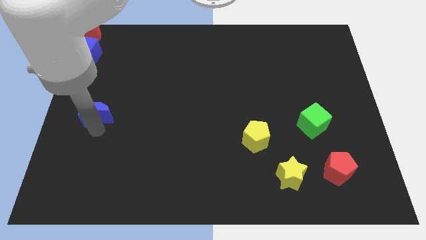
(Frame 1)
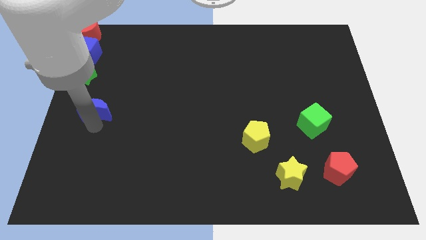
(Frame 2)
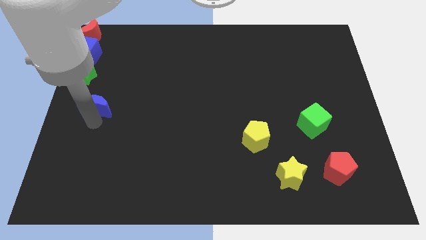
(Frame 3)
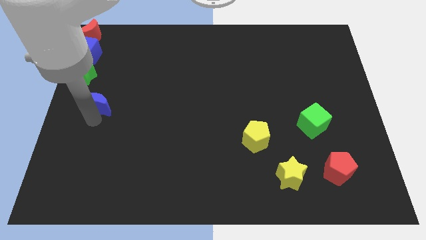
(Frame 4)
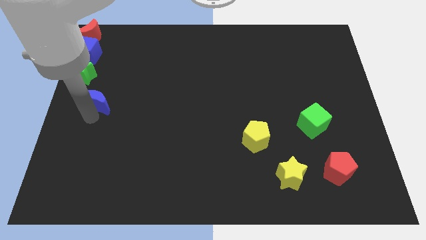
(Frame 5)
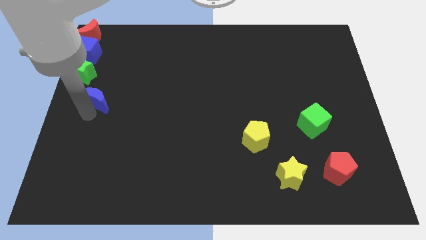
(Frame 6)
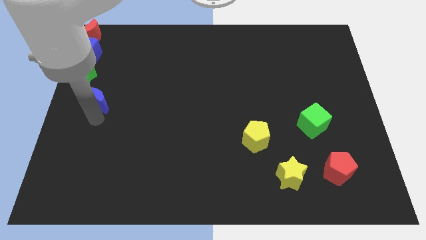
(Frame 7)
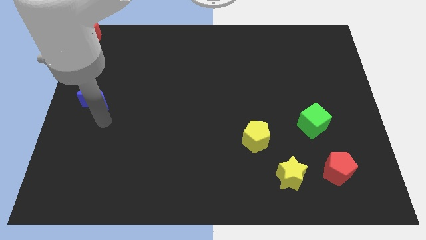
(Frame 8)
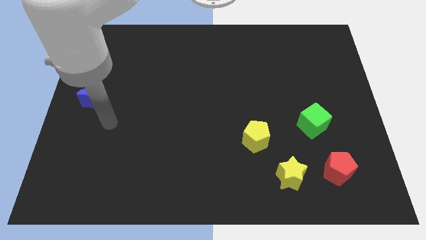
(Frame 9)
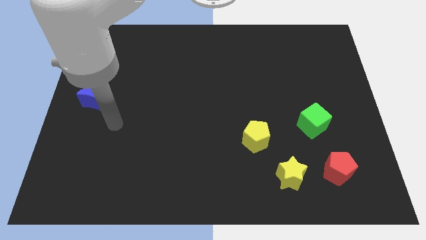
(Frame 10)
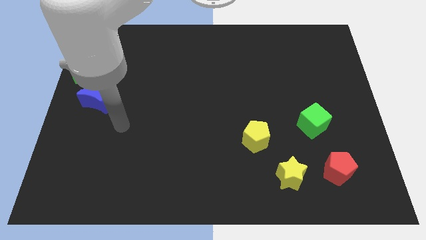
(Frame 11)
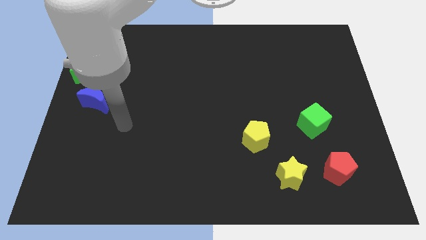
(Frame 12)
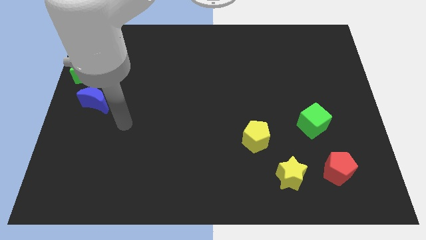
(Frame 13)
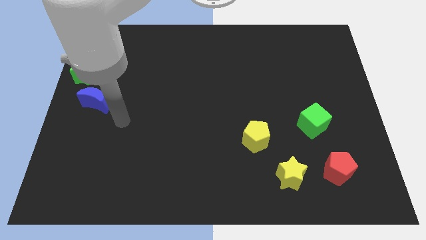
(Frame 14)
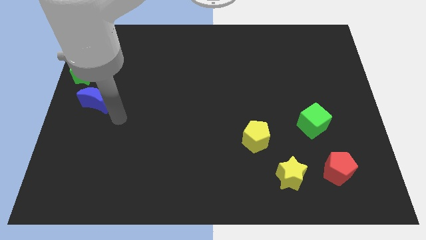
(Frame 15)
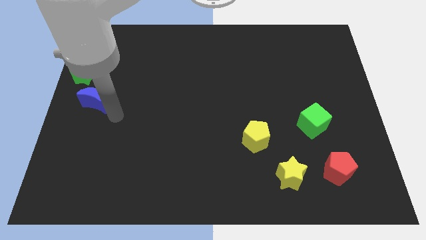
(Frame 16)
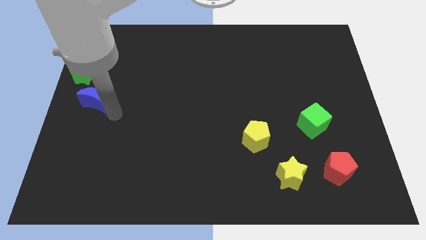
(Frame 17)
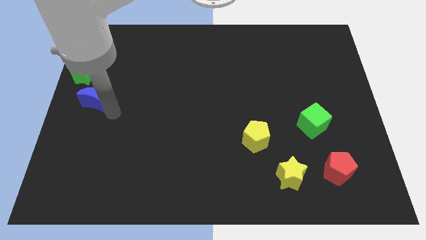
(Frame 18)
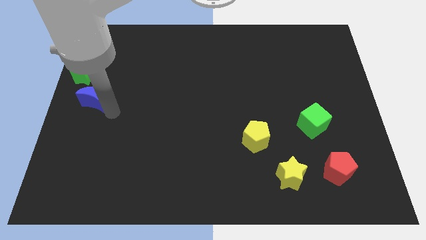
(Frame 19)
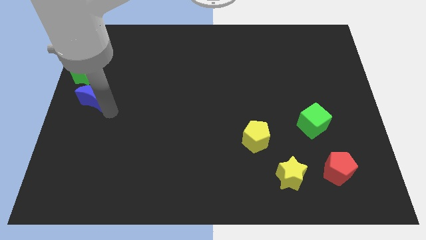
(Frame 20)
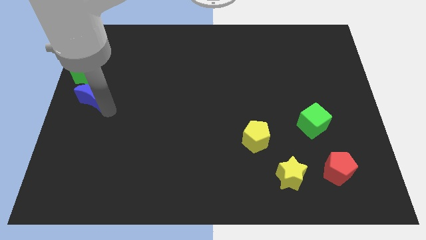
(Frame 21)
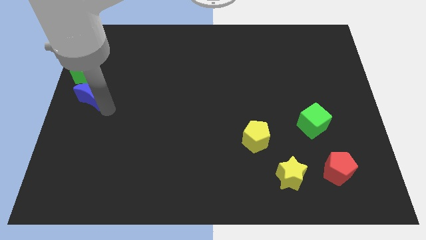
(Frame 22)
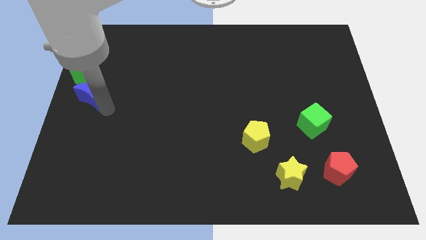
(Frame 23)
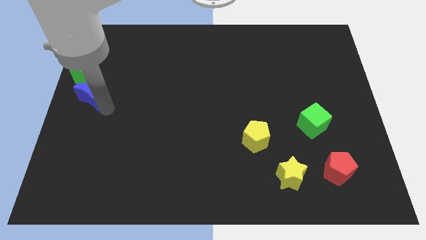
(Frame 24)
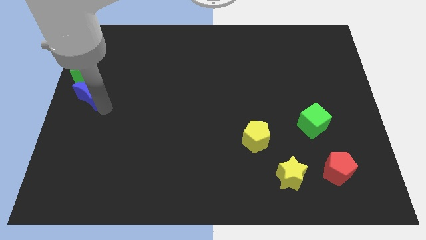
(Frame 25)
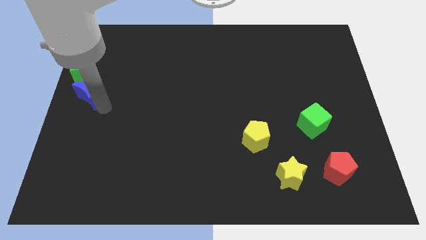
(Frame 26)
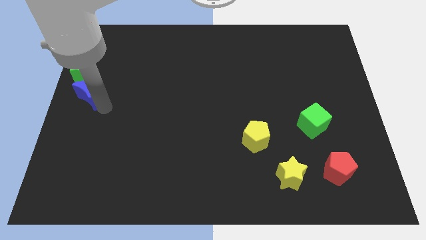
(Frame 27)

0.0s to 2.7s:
push blue crescent towards the green star

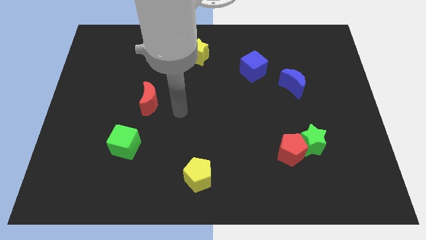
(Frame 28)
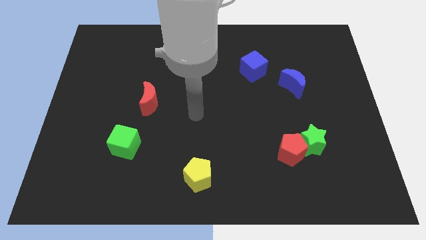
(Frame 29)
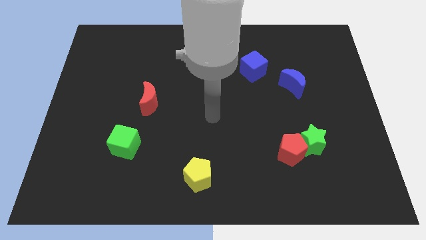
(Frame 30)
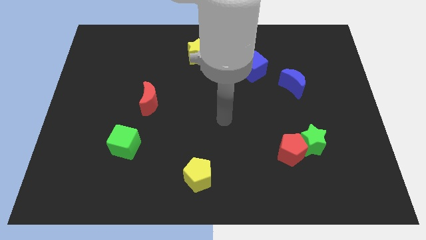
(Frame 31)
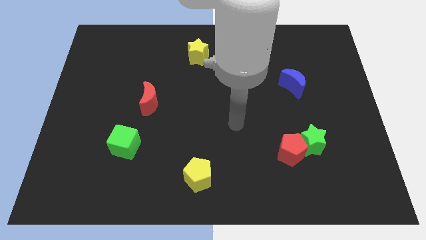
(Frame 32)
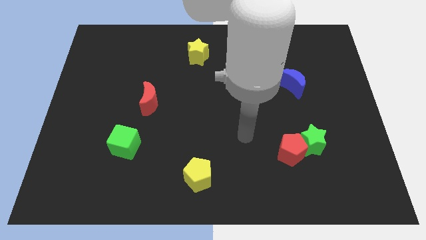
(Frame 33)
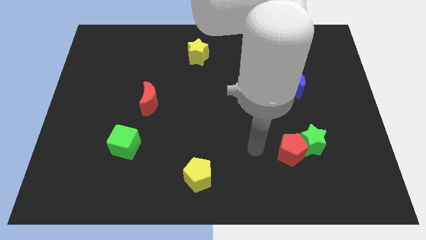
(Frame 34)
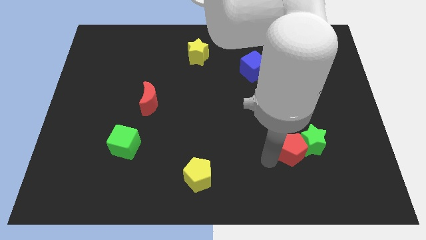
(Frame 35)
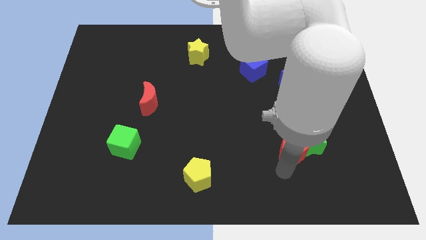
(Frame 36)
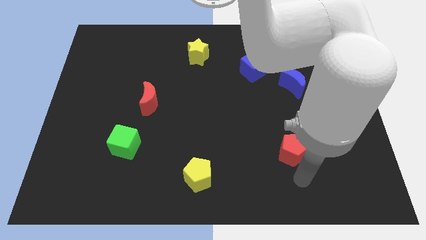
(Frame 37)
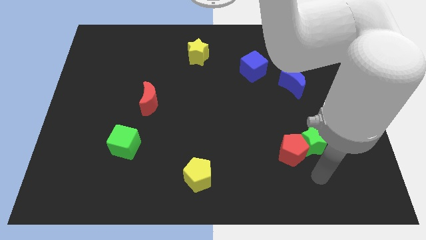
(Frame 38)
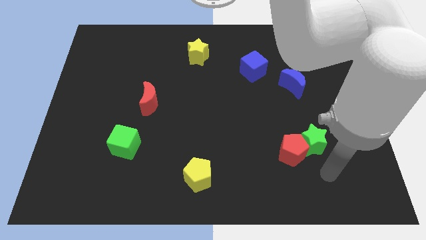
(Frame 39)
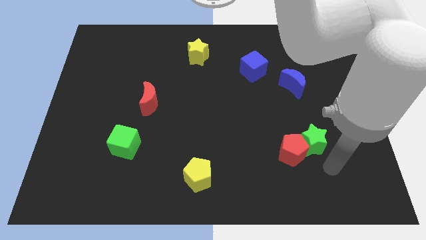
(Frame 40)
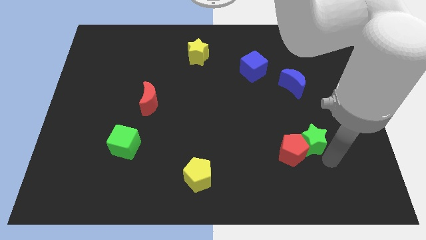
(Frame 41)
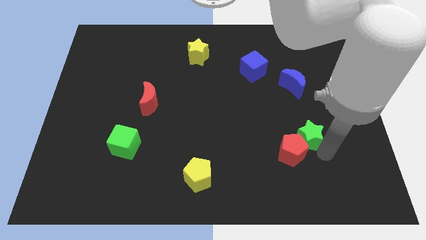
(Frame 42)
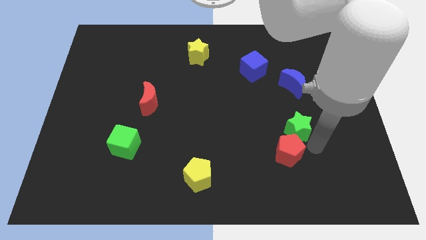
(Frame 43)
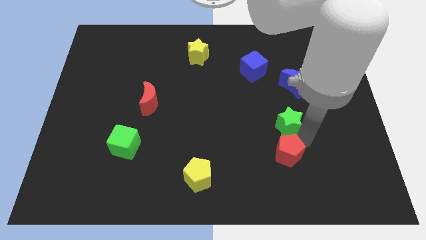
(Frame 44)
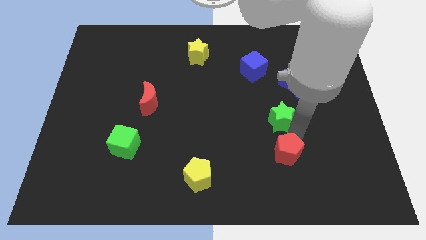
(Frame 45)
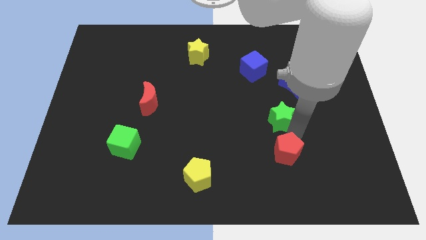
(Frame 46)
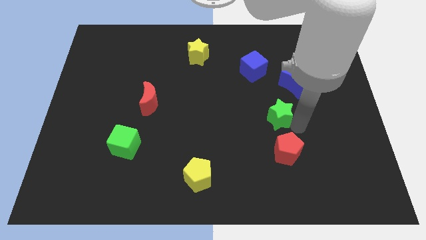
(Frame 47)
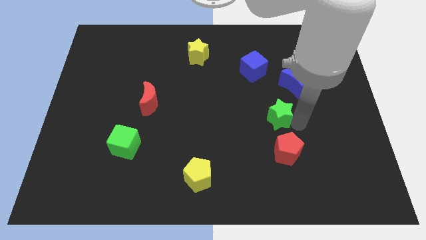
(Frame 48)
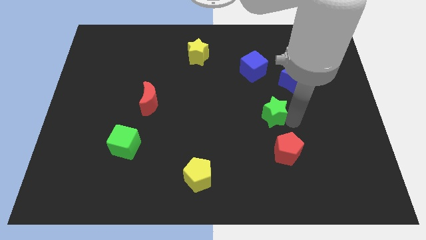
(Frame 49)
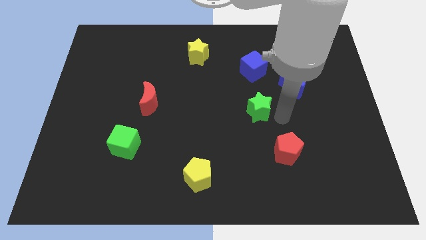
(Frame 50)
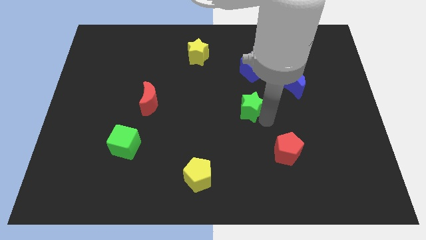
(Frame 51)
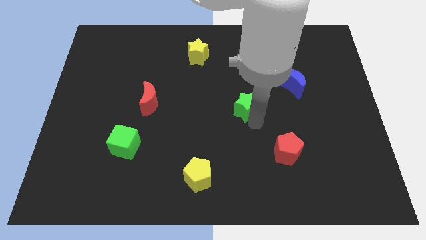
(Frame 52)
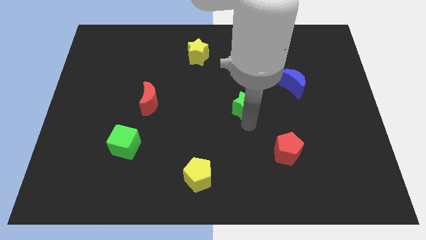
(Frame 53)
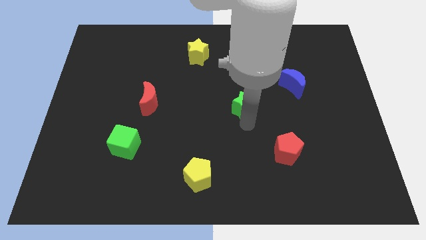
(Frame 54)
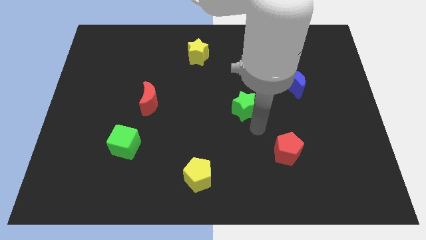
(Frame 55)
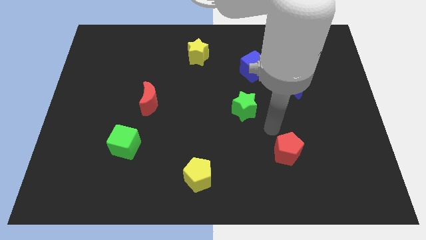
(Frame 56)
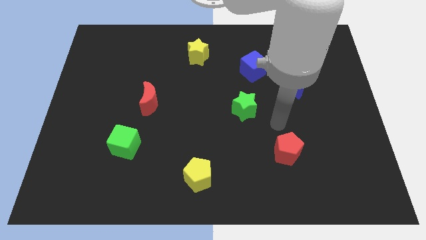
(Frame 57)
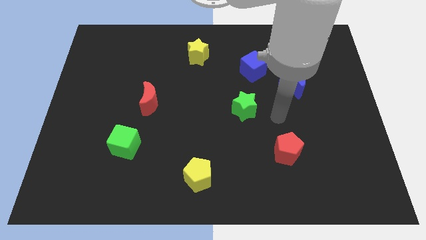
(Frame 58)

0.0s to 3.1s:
separate green star and the red pentagon

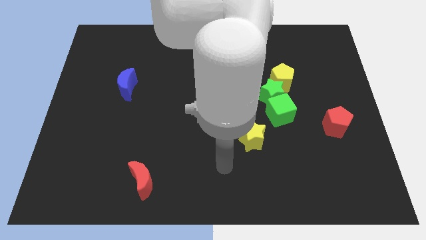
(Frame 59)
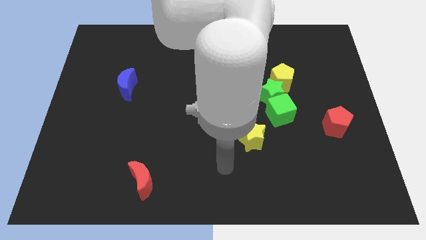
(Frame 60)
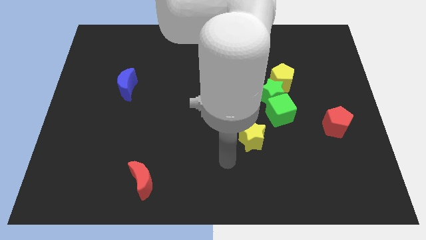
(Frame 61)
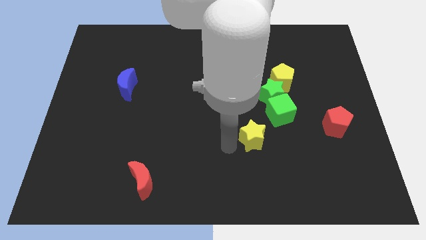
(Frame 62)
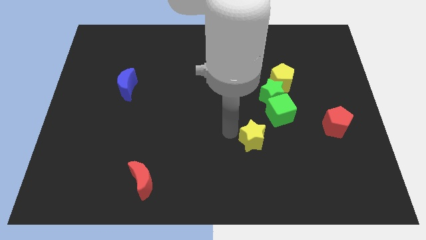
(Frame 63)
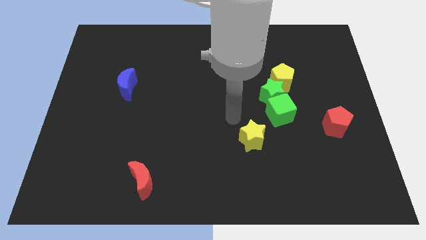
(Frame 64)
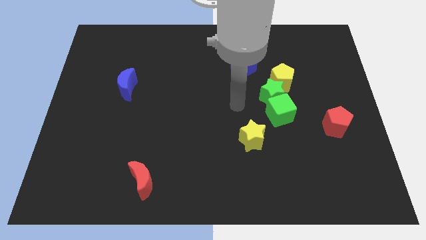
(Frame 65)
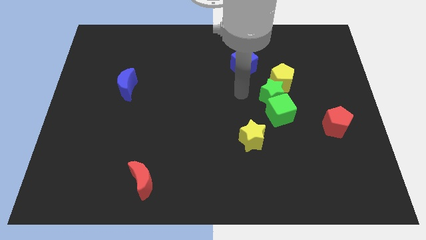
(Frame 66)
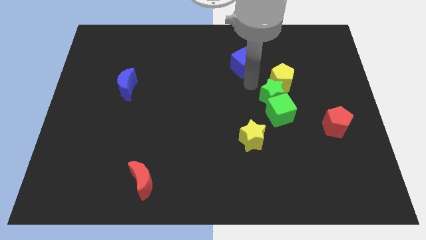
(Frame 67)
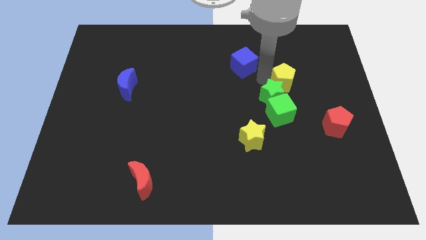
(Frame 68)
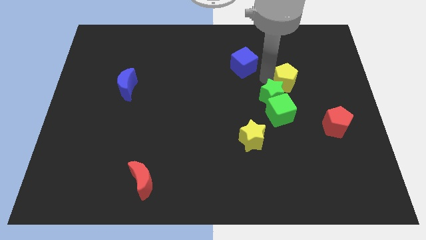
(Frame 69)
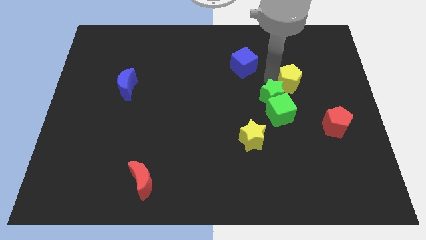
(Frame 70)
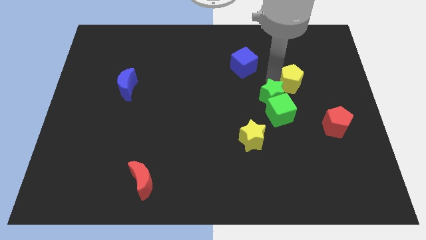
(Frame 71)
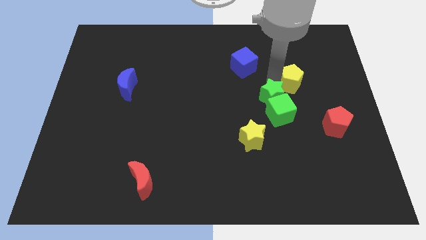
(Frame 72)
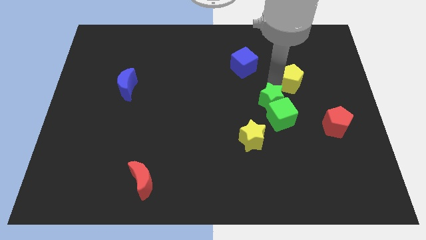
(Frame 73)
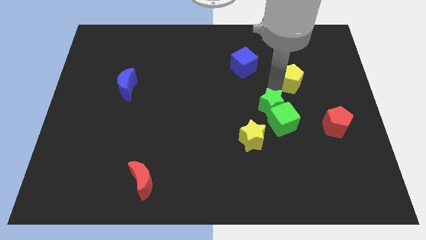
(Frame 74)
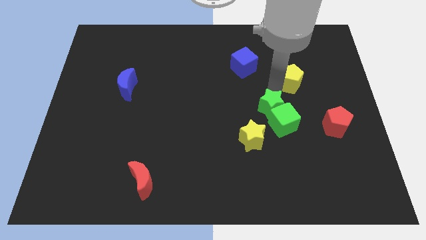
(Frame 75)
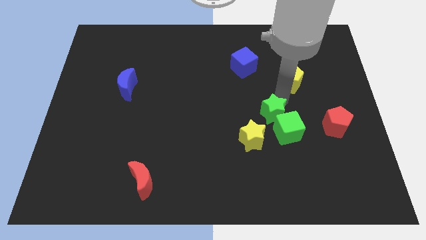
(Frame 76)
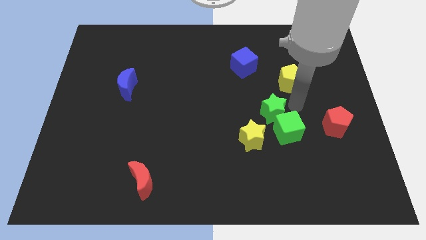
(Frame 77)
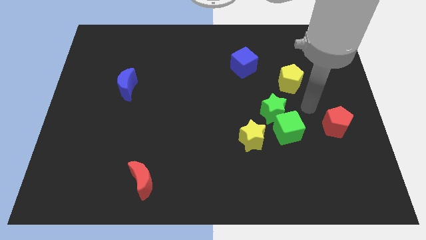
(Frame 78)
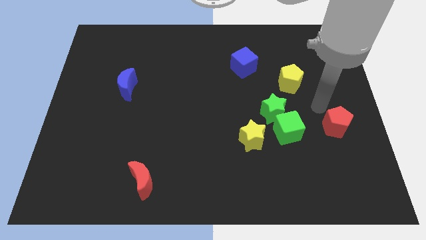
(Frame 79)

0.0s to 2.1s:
place green blocks in between the yellow blocks

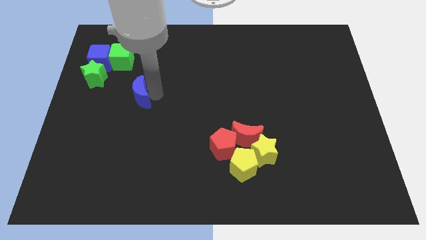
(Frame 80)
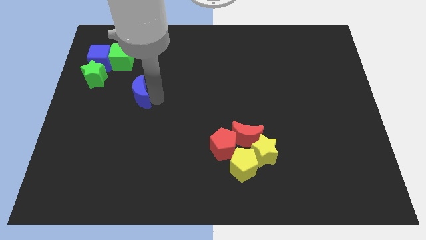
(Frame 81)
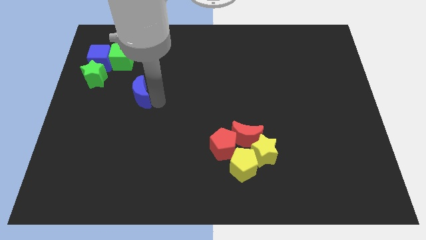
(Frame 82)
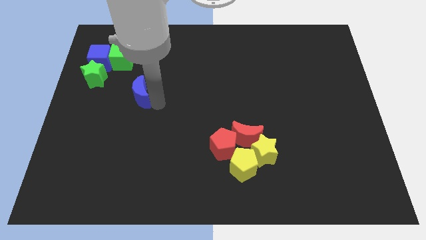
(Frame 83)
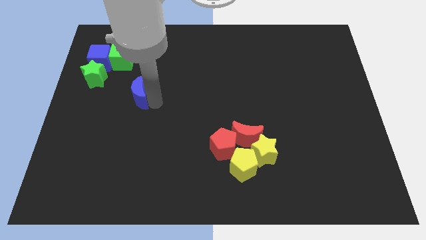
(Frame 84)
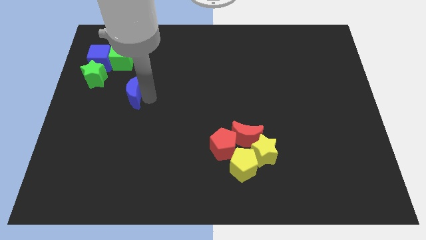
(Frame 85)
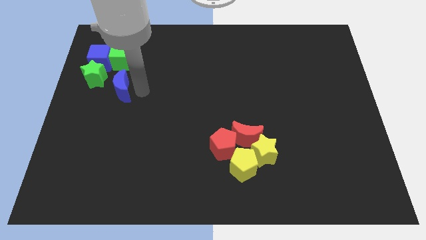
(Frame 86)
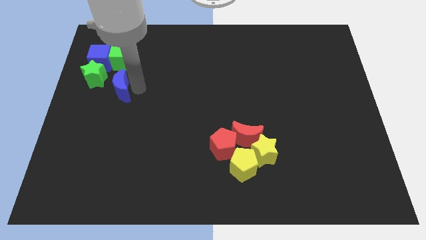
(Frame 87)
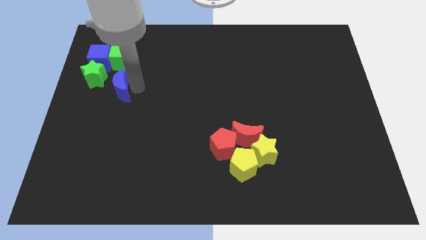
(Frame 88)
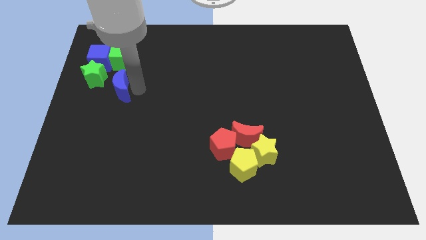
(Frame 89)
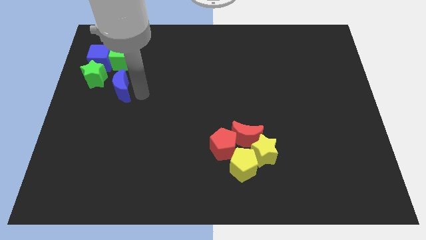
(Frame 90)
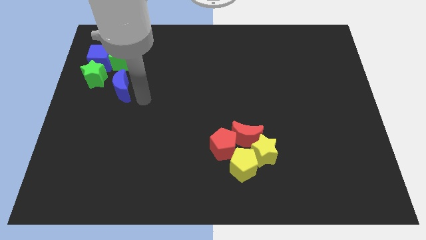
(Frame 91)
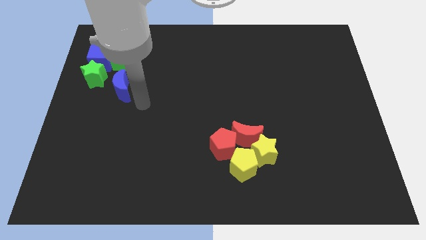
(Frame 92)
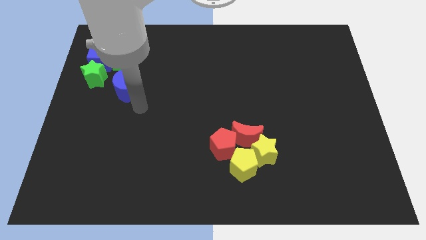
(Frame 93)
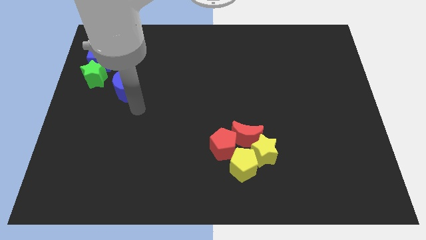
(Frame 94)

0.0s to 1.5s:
move the blue moon close to green star
